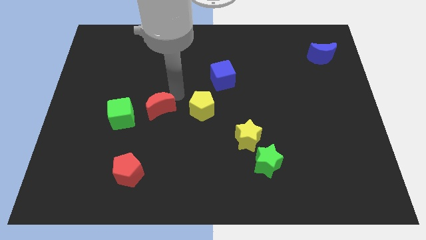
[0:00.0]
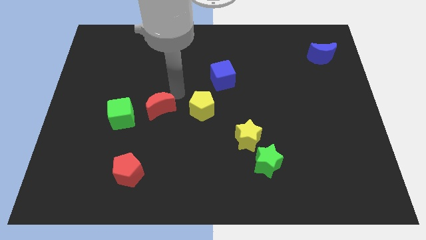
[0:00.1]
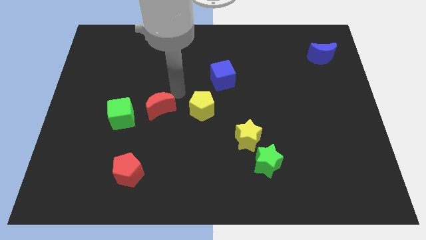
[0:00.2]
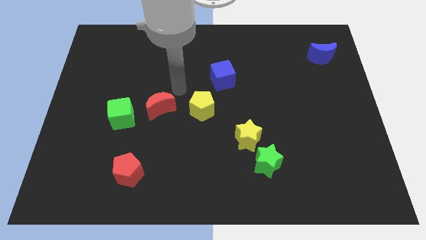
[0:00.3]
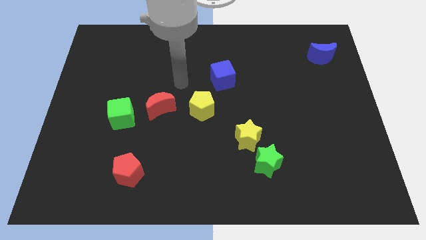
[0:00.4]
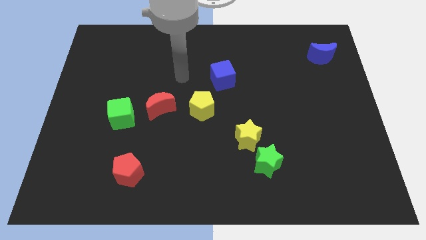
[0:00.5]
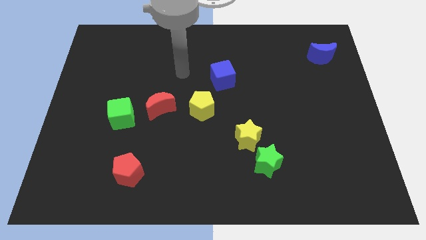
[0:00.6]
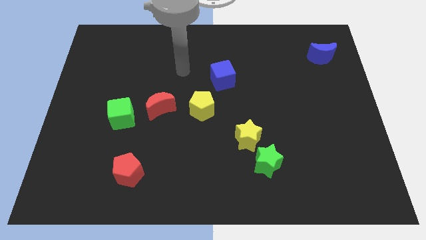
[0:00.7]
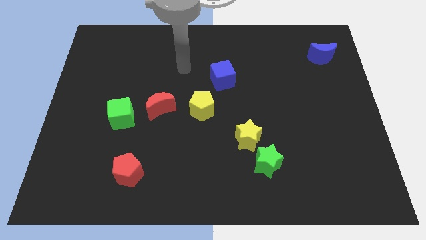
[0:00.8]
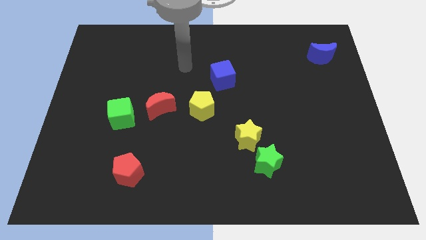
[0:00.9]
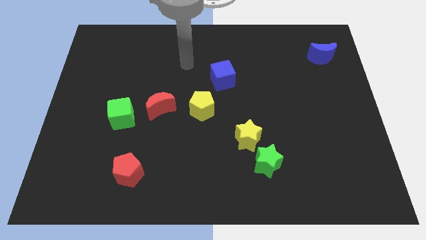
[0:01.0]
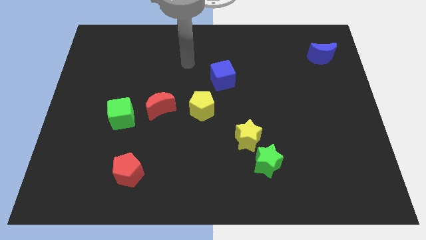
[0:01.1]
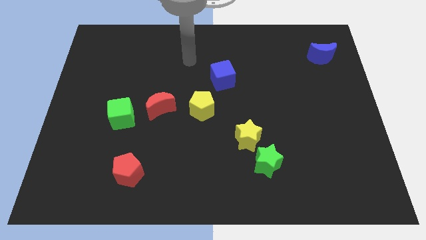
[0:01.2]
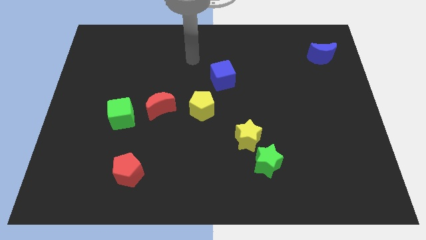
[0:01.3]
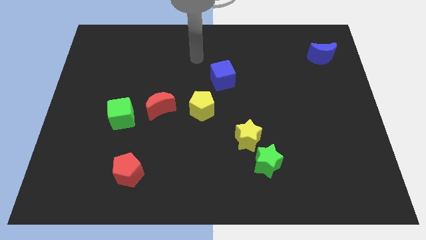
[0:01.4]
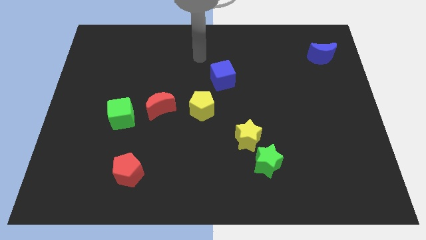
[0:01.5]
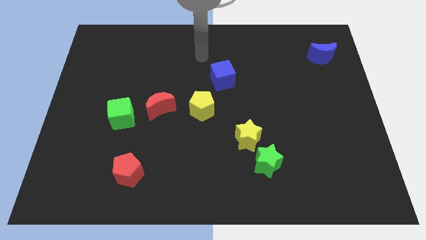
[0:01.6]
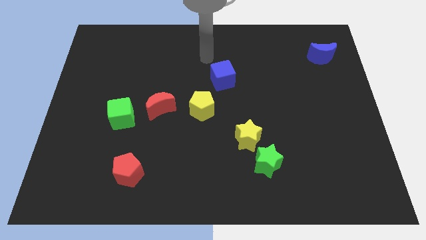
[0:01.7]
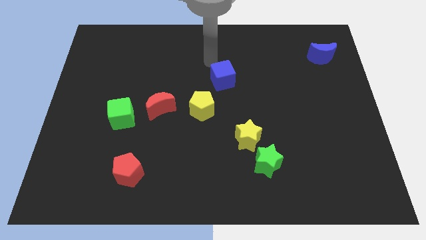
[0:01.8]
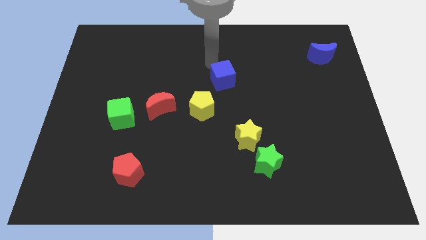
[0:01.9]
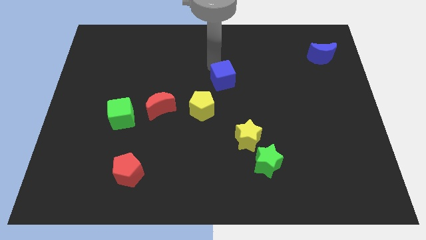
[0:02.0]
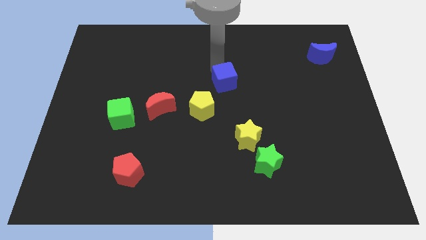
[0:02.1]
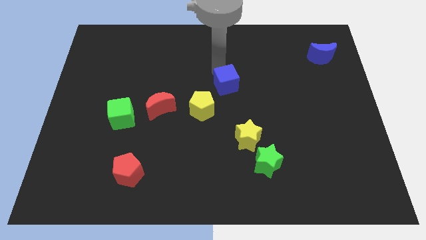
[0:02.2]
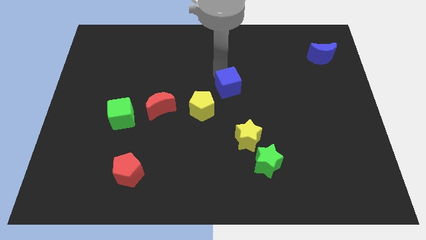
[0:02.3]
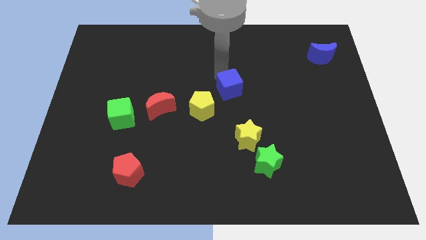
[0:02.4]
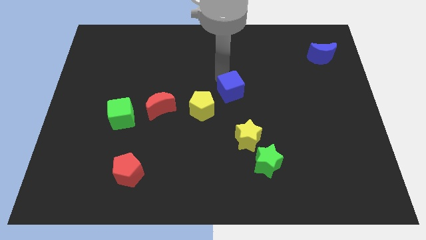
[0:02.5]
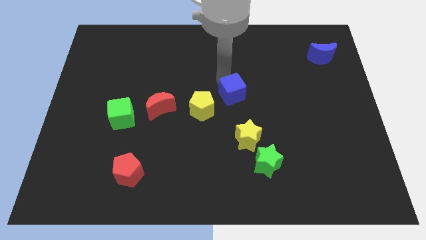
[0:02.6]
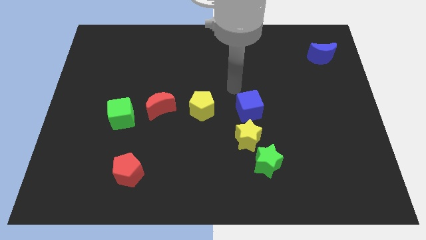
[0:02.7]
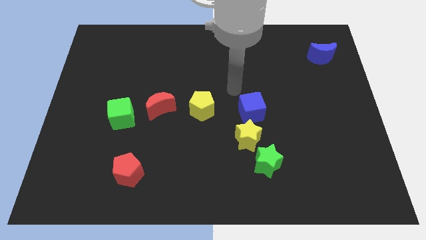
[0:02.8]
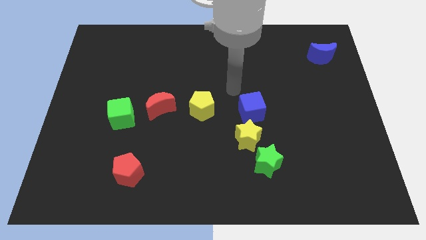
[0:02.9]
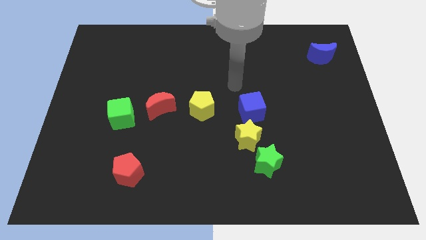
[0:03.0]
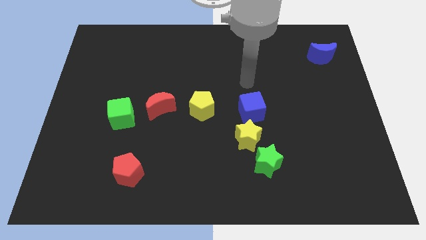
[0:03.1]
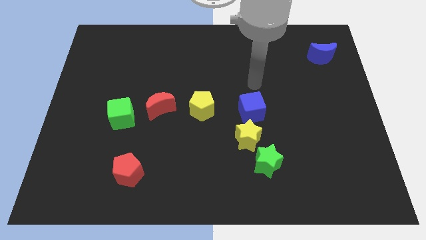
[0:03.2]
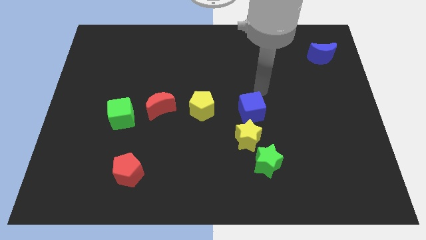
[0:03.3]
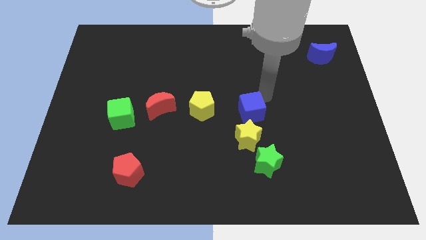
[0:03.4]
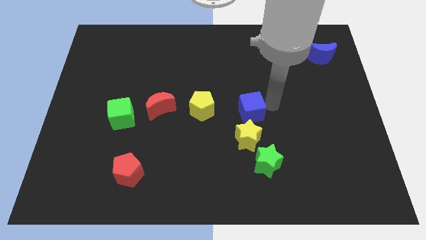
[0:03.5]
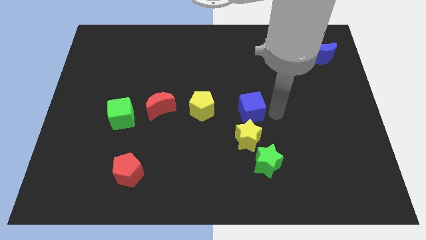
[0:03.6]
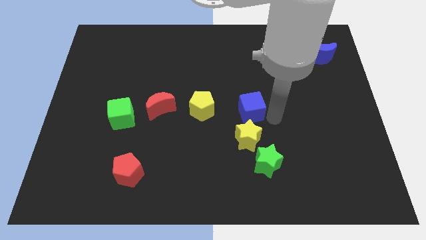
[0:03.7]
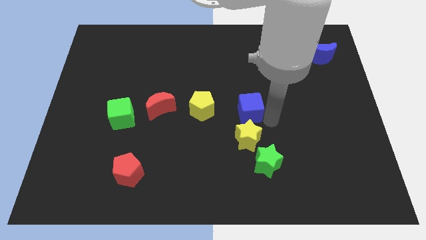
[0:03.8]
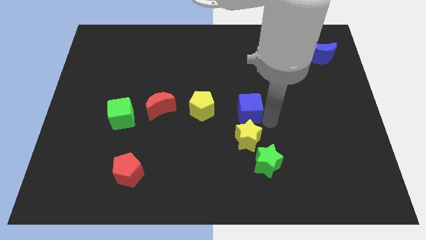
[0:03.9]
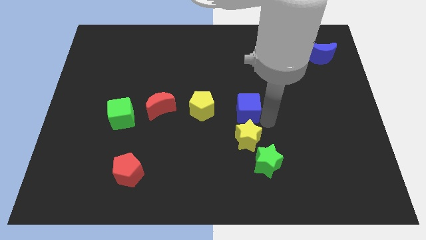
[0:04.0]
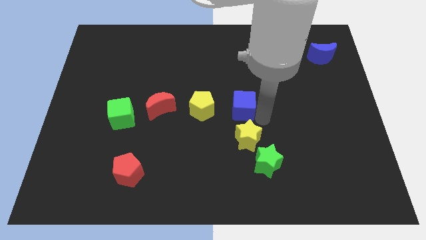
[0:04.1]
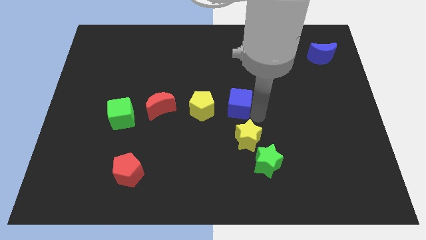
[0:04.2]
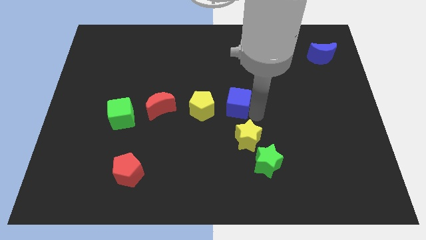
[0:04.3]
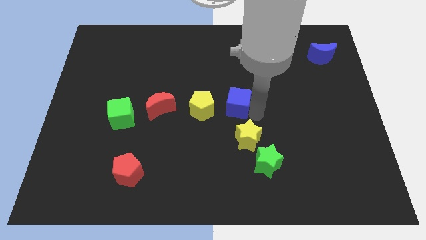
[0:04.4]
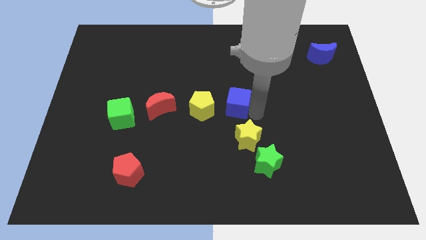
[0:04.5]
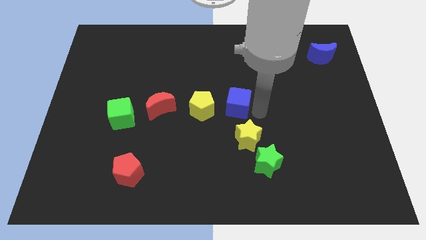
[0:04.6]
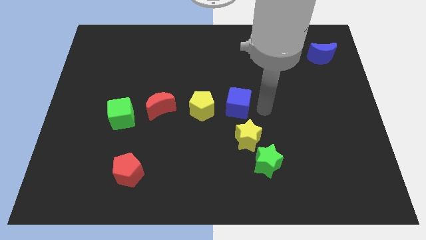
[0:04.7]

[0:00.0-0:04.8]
move the blue cube to the right of the yellow pentagon

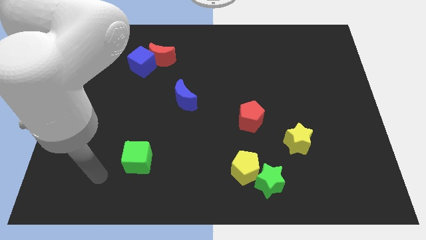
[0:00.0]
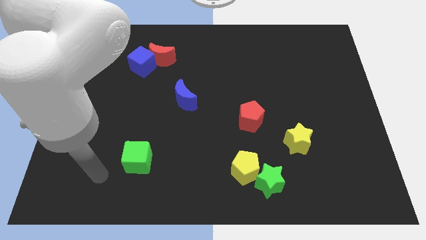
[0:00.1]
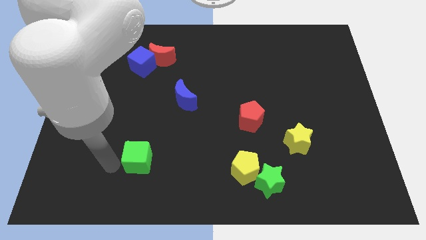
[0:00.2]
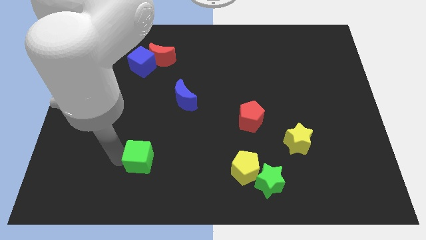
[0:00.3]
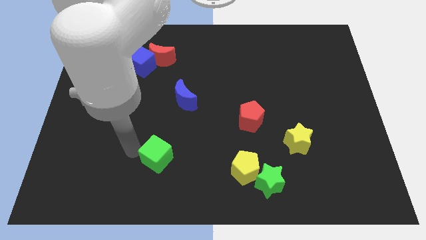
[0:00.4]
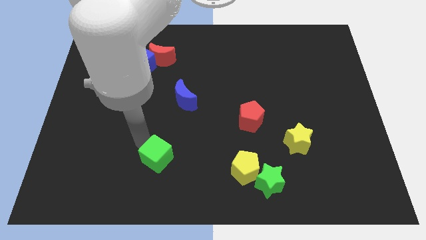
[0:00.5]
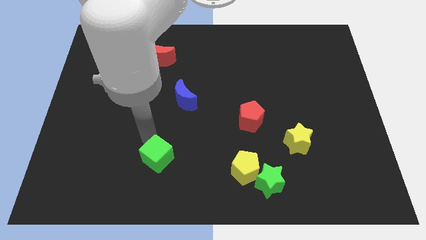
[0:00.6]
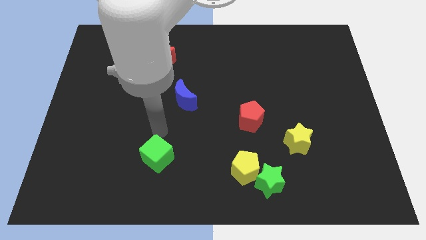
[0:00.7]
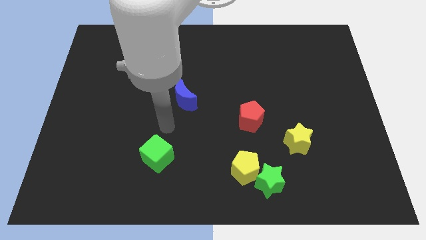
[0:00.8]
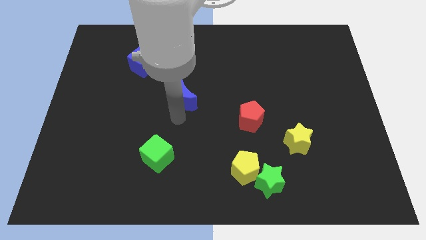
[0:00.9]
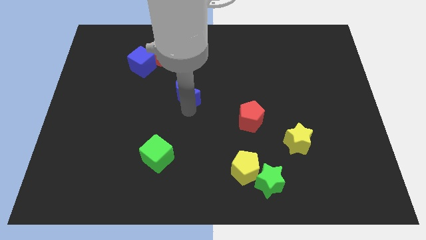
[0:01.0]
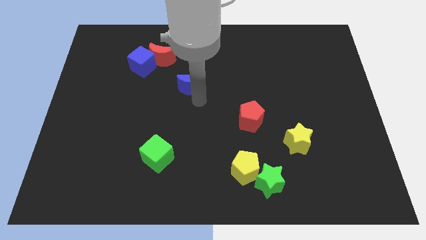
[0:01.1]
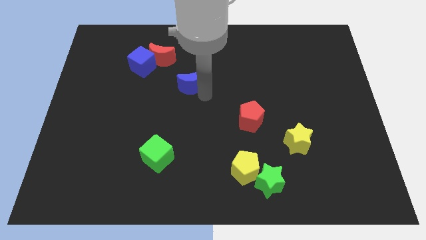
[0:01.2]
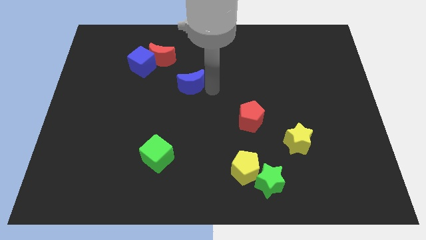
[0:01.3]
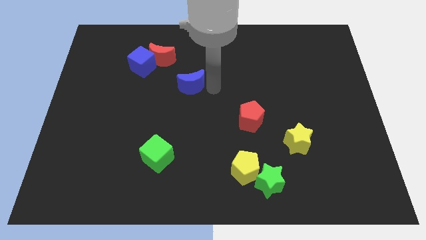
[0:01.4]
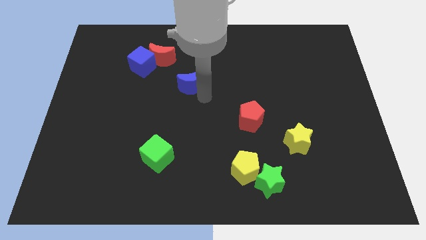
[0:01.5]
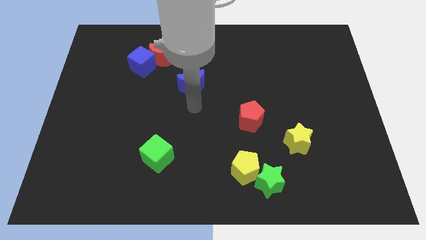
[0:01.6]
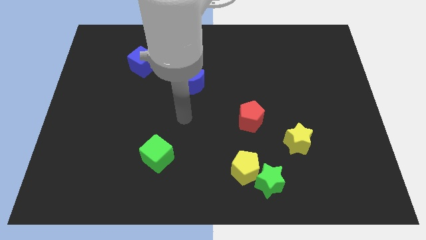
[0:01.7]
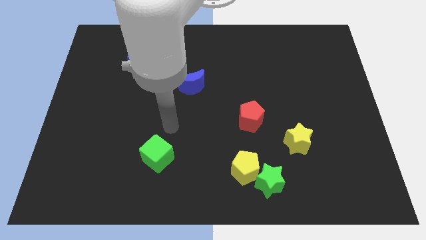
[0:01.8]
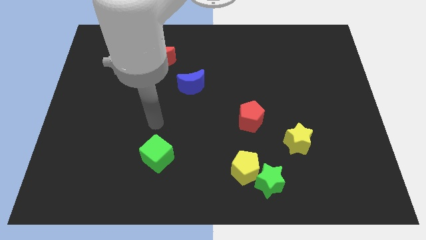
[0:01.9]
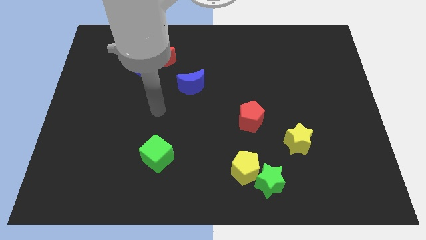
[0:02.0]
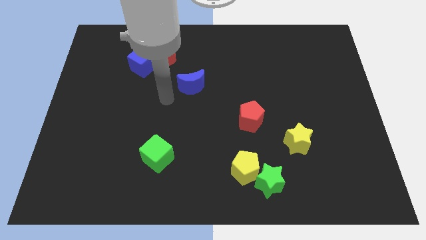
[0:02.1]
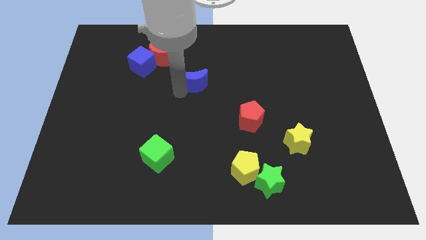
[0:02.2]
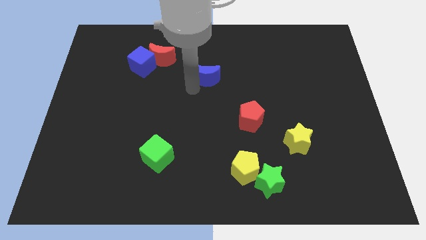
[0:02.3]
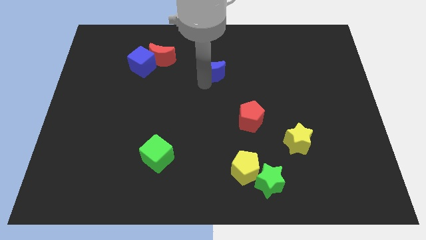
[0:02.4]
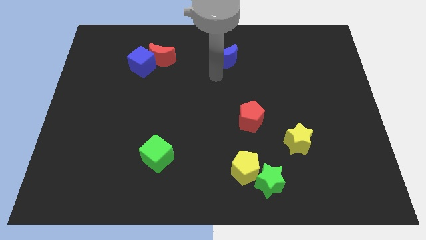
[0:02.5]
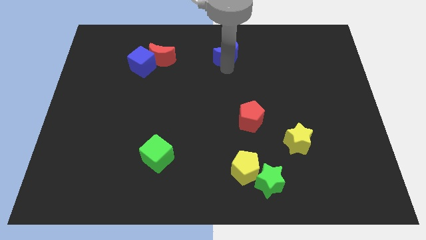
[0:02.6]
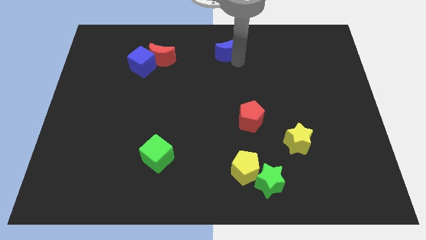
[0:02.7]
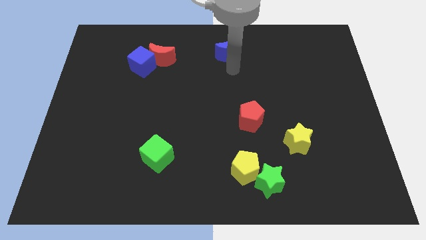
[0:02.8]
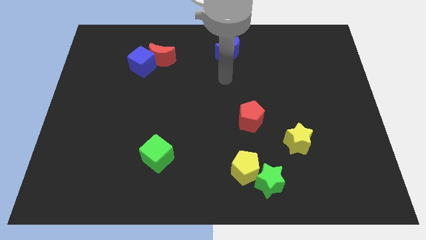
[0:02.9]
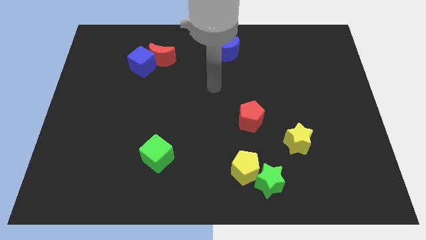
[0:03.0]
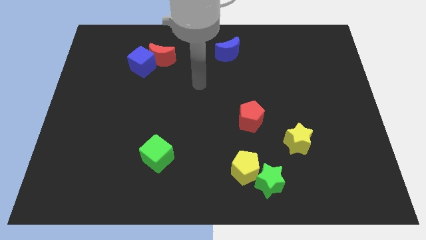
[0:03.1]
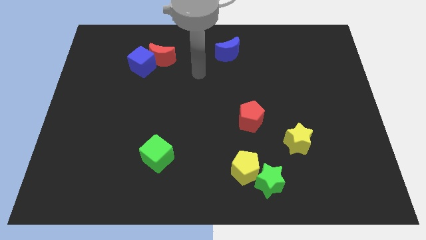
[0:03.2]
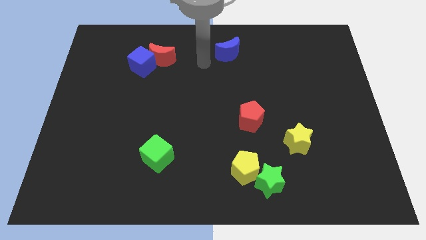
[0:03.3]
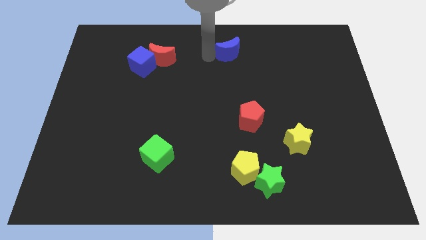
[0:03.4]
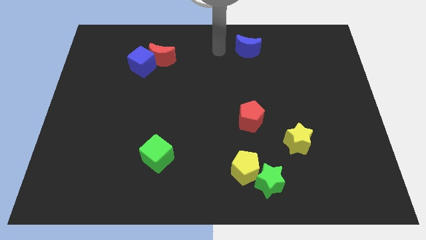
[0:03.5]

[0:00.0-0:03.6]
place your arm towards the top center of the board

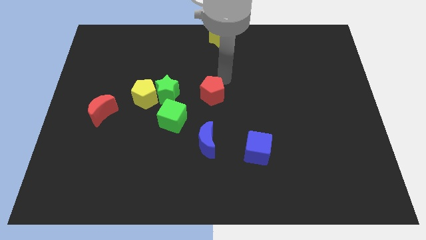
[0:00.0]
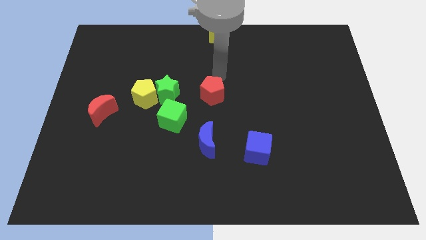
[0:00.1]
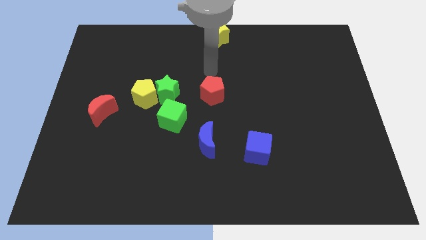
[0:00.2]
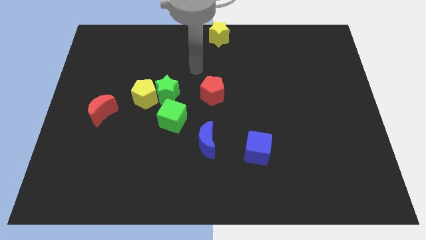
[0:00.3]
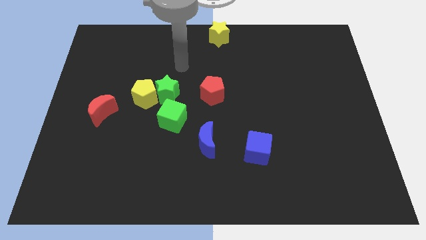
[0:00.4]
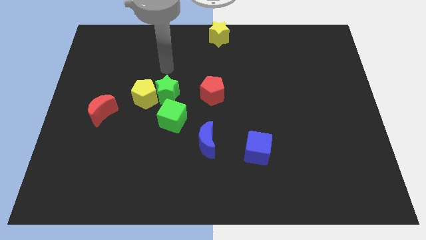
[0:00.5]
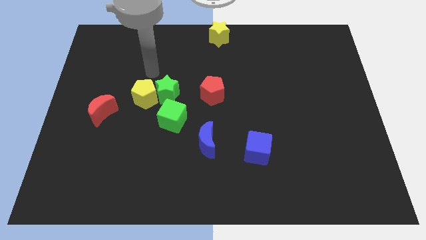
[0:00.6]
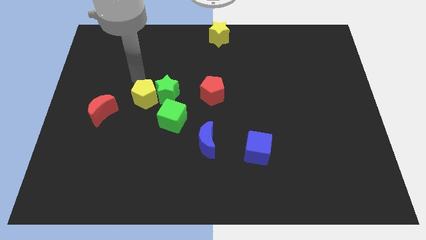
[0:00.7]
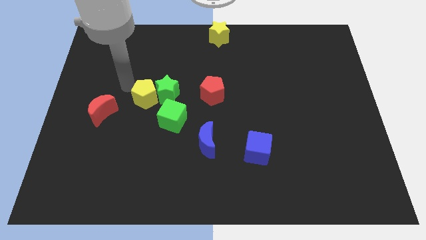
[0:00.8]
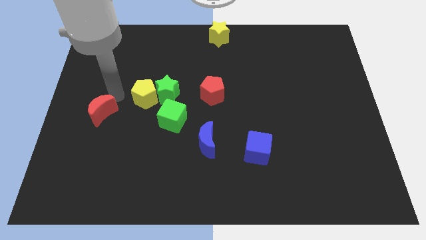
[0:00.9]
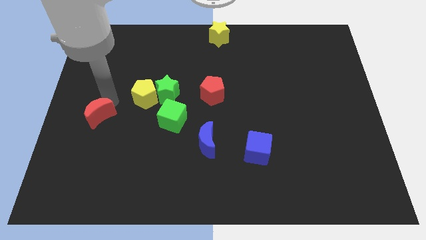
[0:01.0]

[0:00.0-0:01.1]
tap the top side of the red crescent
